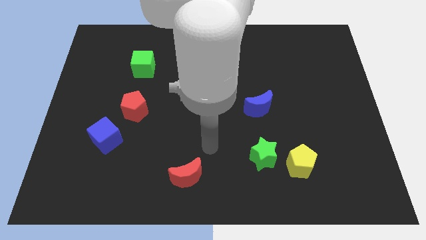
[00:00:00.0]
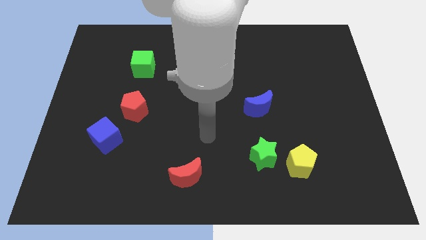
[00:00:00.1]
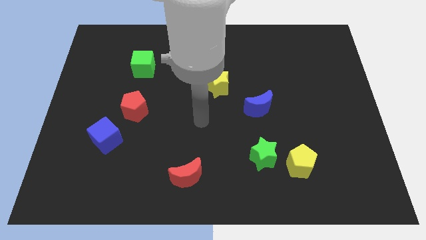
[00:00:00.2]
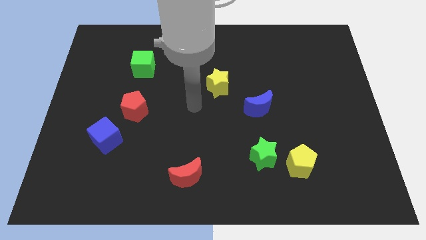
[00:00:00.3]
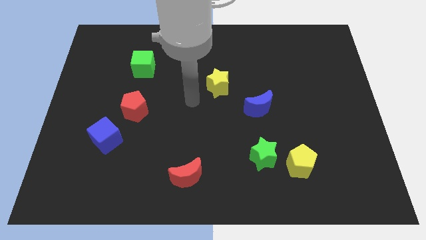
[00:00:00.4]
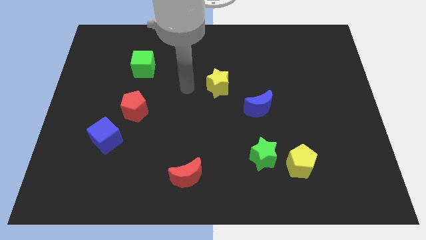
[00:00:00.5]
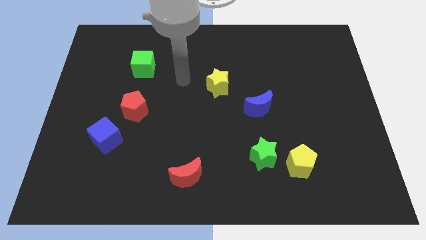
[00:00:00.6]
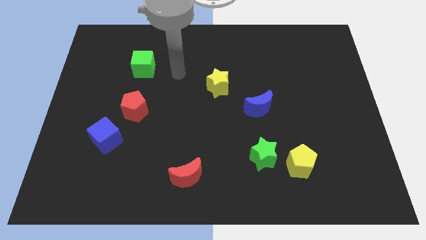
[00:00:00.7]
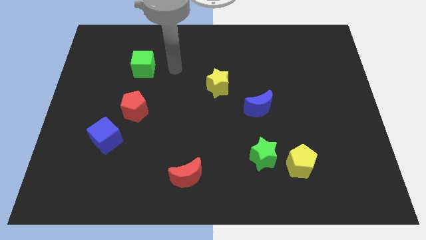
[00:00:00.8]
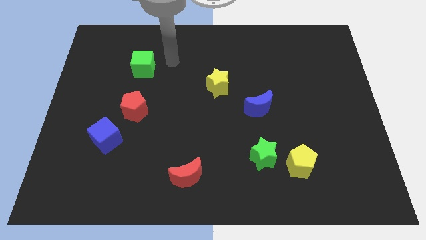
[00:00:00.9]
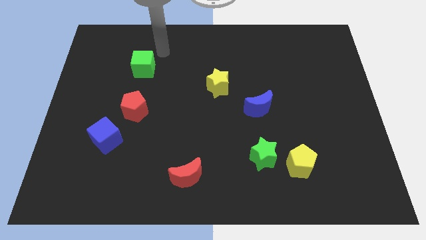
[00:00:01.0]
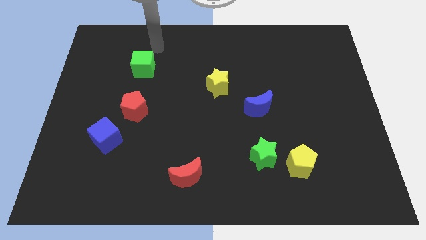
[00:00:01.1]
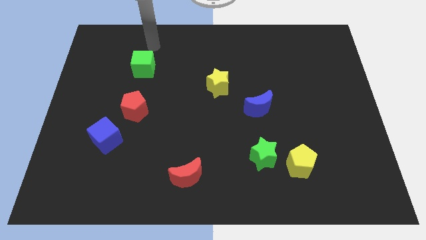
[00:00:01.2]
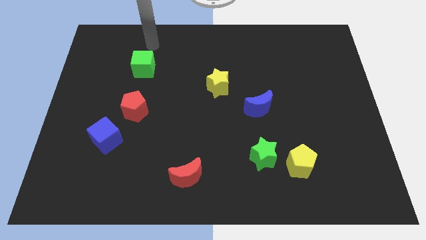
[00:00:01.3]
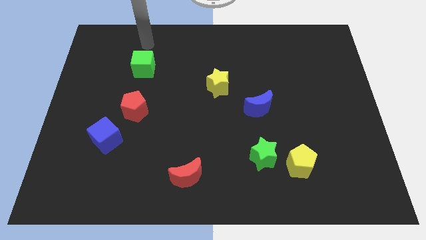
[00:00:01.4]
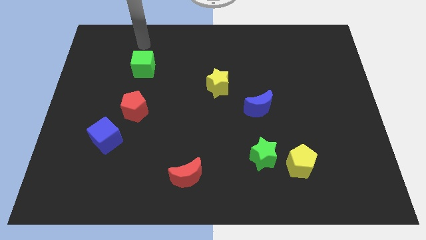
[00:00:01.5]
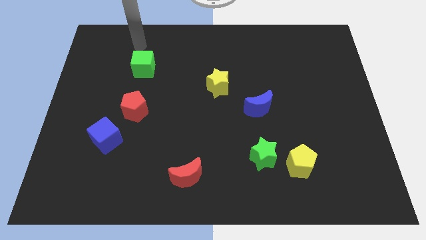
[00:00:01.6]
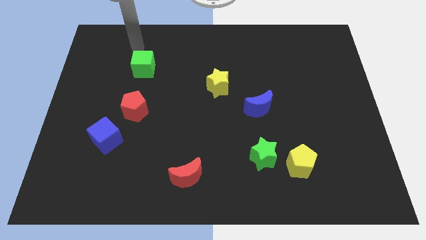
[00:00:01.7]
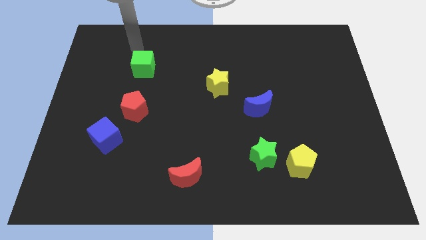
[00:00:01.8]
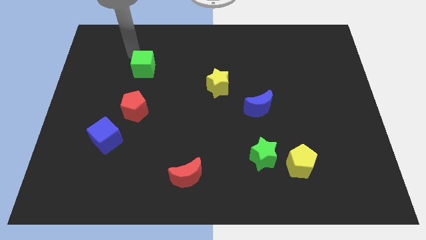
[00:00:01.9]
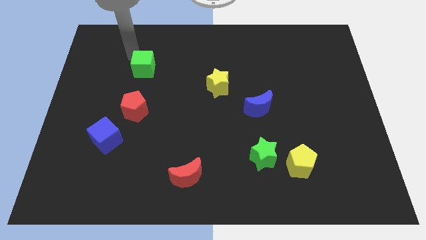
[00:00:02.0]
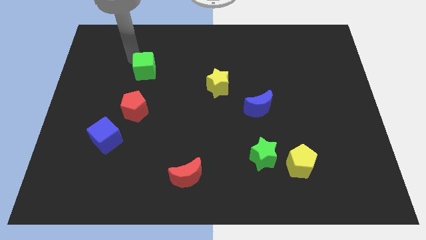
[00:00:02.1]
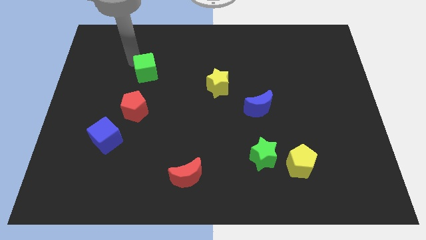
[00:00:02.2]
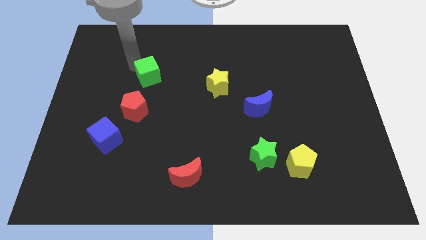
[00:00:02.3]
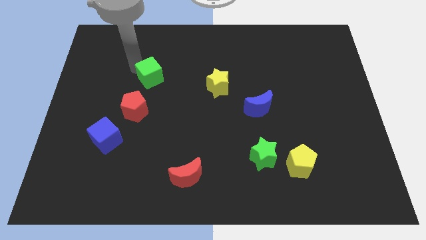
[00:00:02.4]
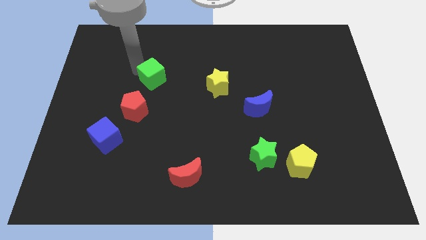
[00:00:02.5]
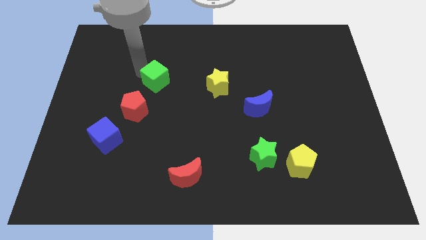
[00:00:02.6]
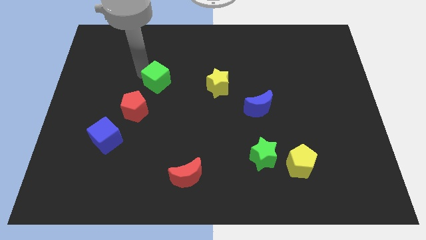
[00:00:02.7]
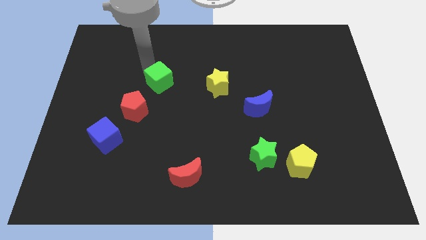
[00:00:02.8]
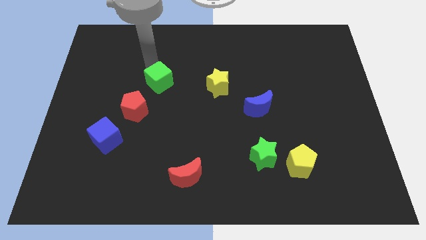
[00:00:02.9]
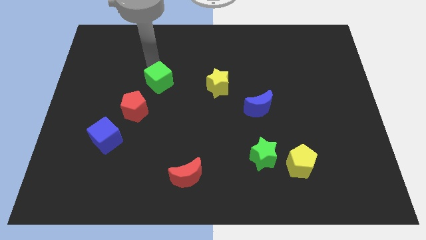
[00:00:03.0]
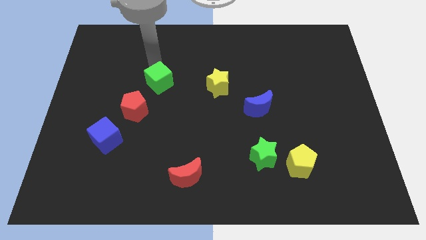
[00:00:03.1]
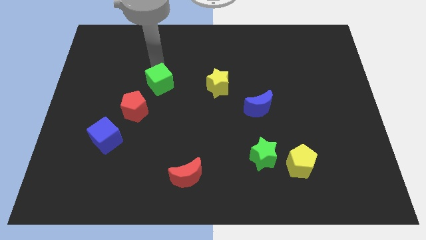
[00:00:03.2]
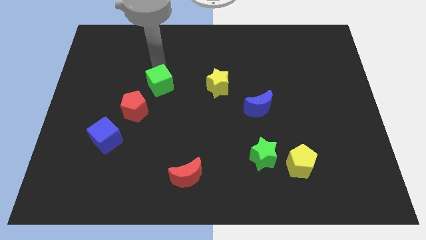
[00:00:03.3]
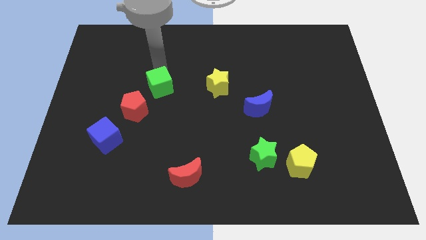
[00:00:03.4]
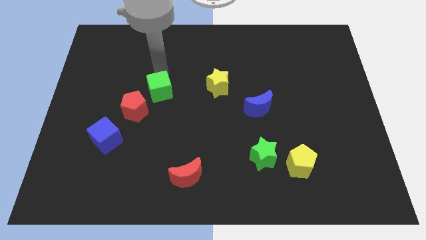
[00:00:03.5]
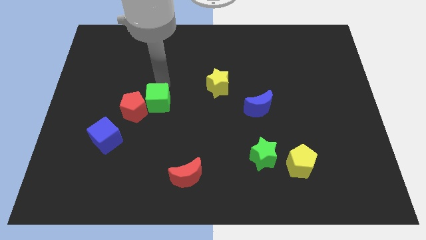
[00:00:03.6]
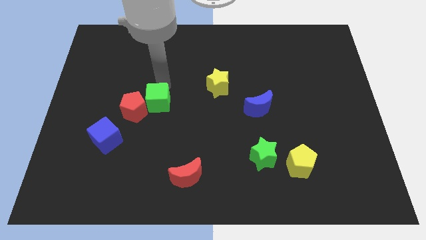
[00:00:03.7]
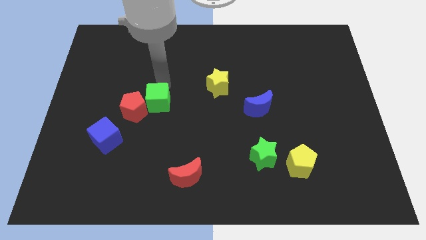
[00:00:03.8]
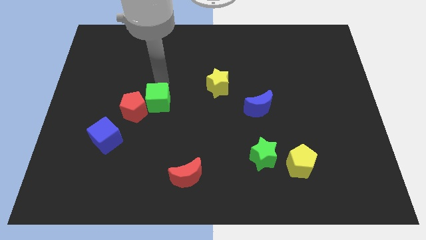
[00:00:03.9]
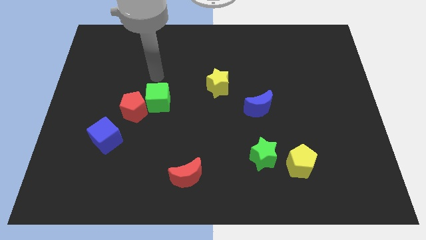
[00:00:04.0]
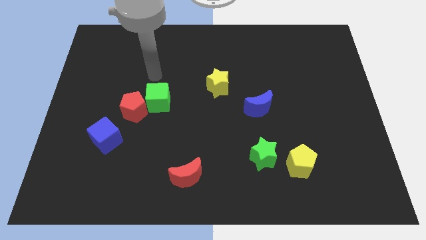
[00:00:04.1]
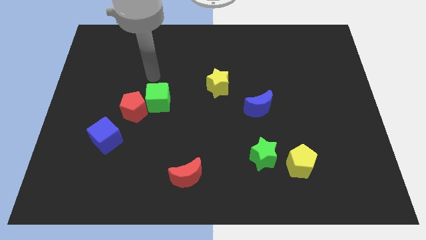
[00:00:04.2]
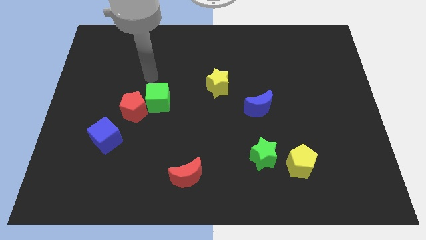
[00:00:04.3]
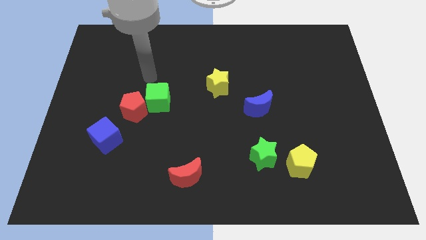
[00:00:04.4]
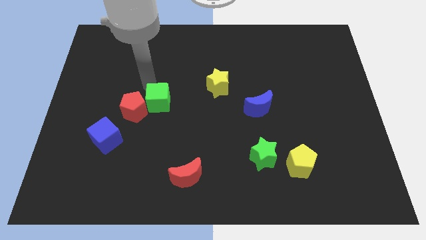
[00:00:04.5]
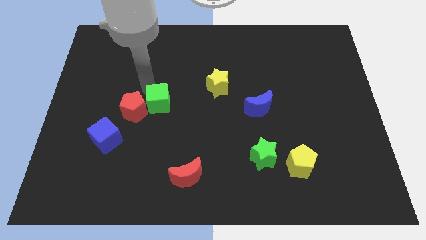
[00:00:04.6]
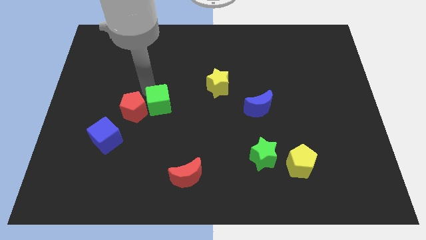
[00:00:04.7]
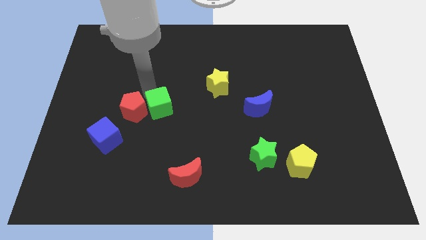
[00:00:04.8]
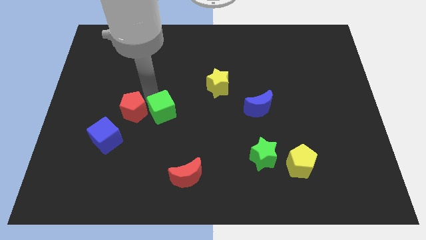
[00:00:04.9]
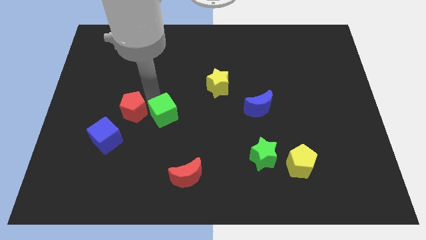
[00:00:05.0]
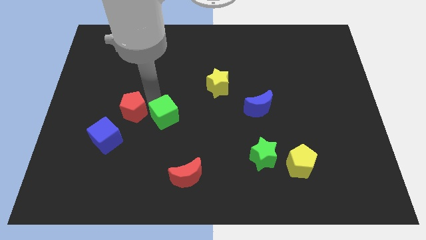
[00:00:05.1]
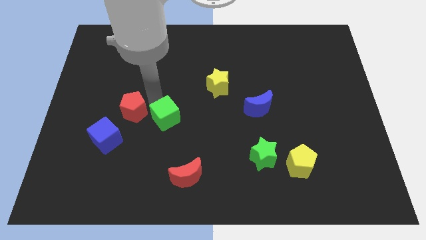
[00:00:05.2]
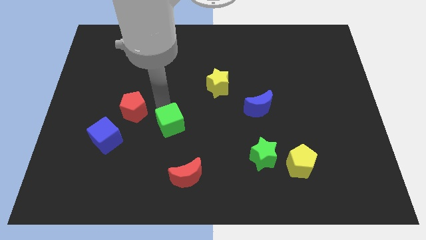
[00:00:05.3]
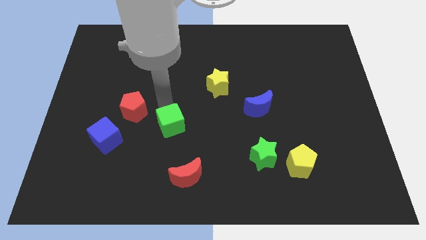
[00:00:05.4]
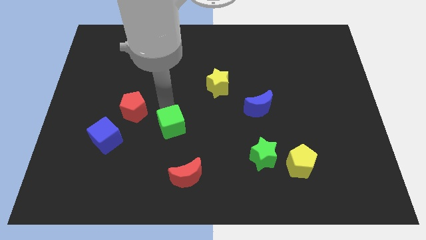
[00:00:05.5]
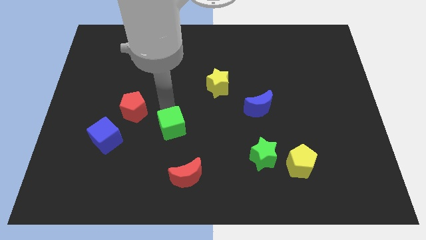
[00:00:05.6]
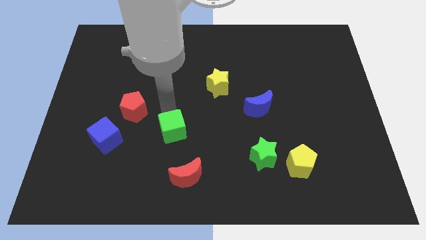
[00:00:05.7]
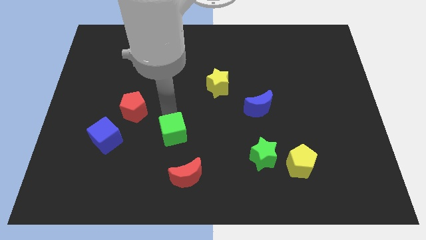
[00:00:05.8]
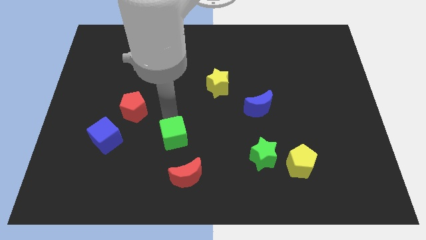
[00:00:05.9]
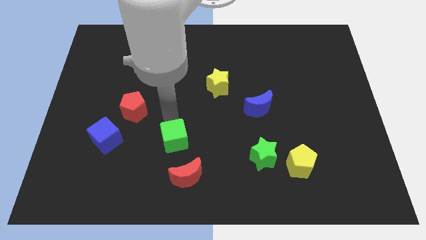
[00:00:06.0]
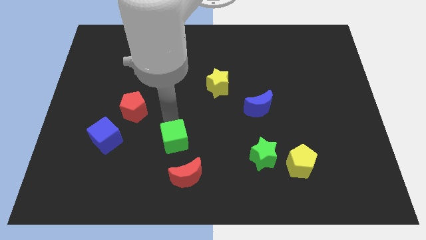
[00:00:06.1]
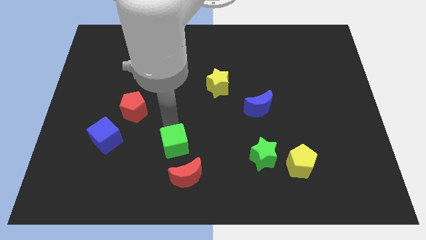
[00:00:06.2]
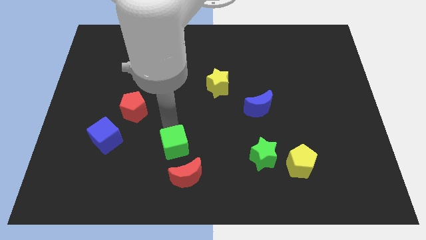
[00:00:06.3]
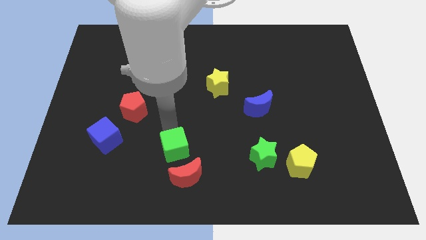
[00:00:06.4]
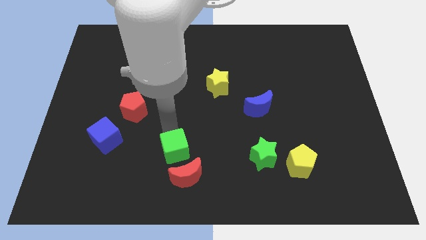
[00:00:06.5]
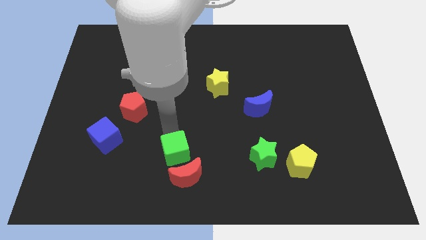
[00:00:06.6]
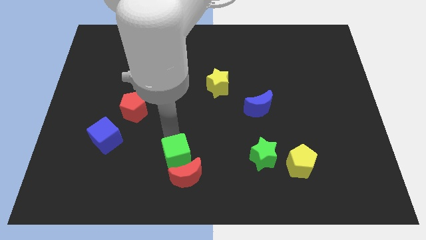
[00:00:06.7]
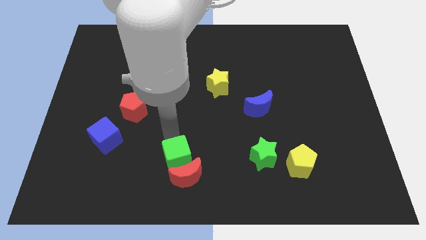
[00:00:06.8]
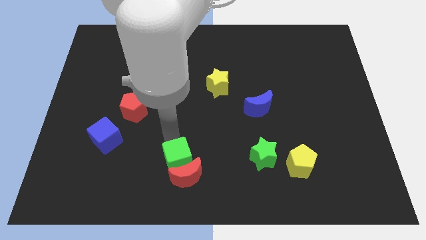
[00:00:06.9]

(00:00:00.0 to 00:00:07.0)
put the green cube to the red moon

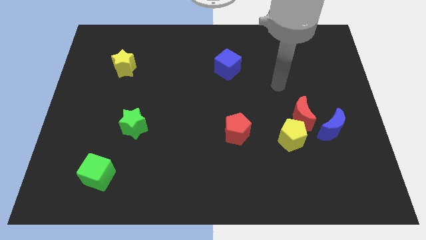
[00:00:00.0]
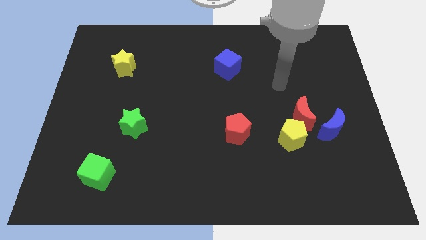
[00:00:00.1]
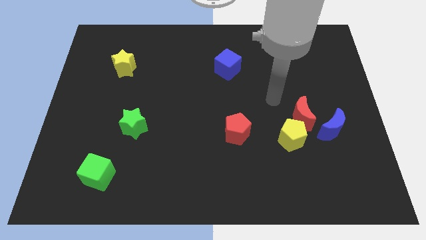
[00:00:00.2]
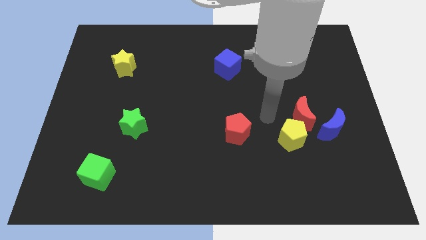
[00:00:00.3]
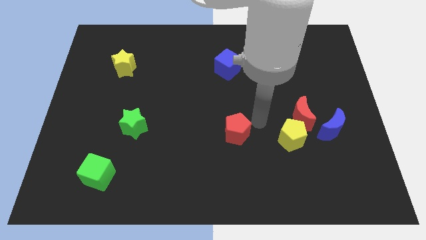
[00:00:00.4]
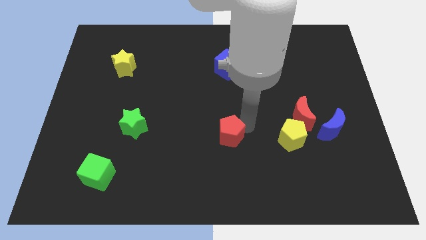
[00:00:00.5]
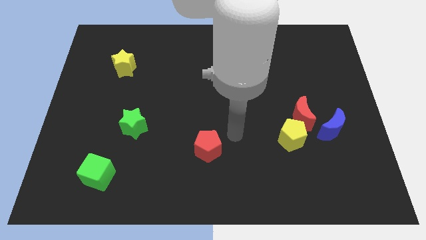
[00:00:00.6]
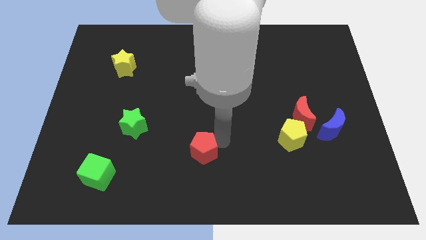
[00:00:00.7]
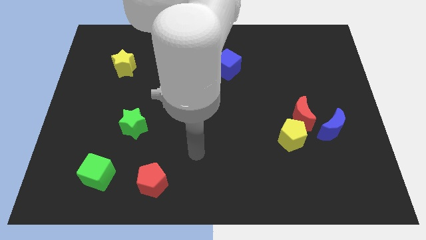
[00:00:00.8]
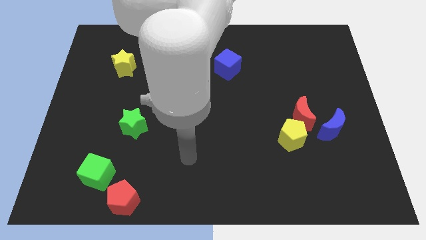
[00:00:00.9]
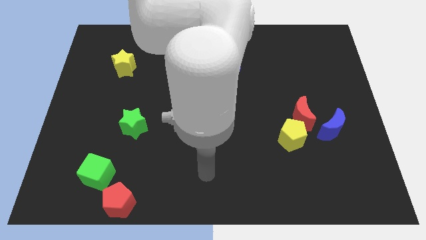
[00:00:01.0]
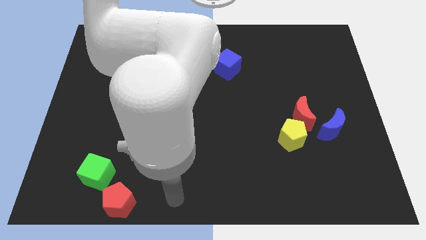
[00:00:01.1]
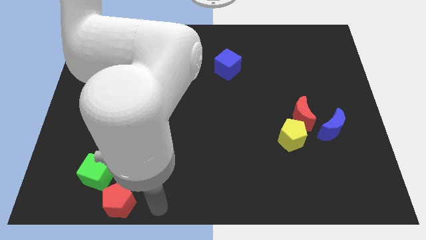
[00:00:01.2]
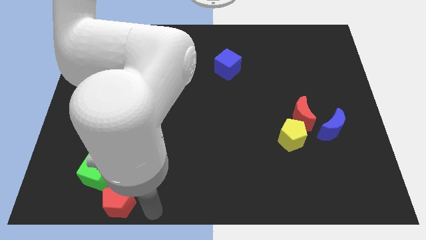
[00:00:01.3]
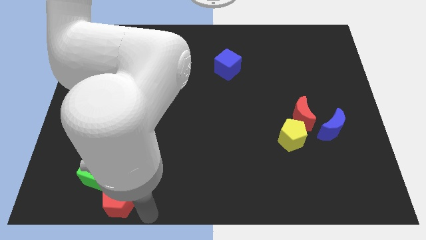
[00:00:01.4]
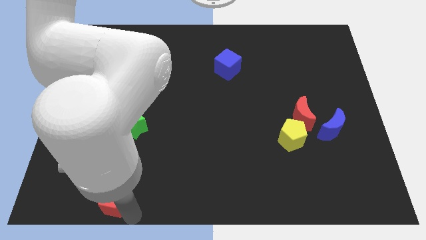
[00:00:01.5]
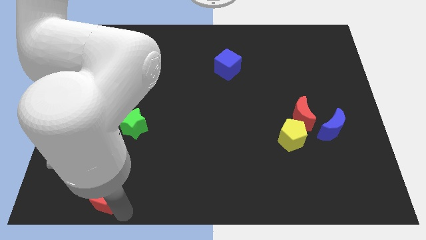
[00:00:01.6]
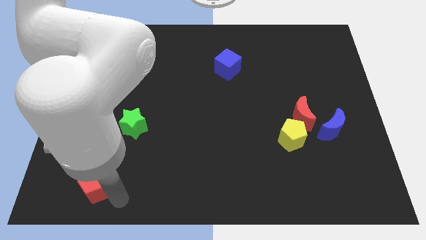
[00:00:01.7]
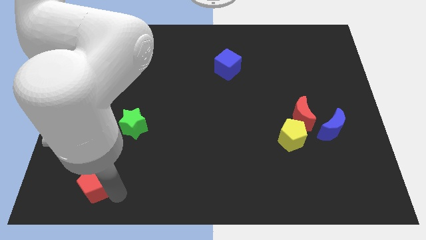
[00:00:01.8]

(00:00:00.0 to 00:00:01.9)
push the red pentagon to the green cube
